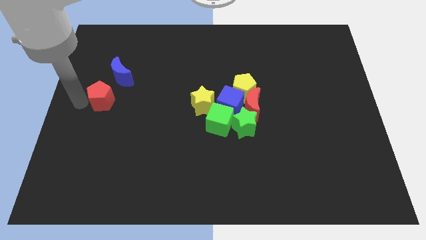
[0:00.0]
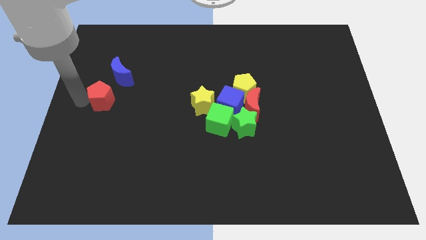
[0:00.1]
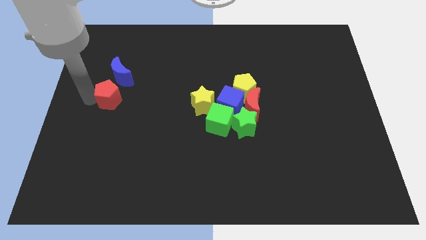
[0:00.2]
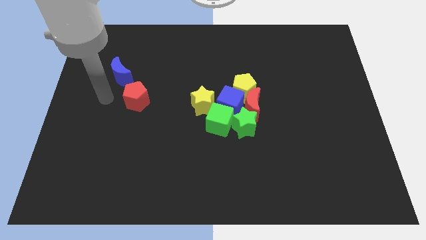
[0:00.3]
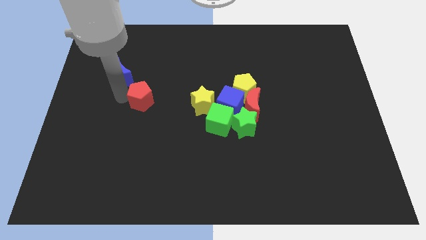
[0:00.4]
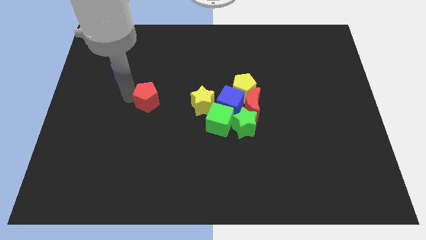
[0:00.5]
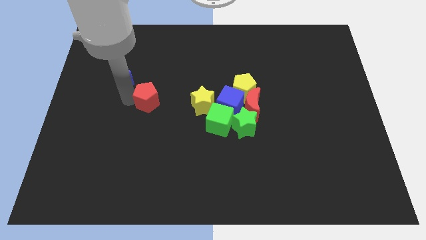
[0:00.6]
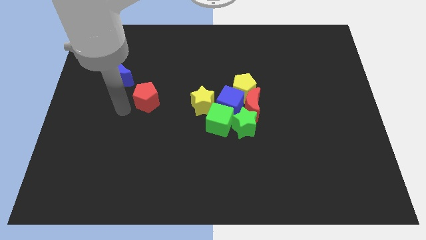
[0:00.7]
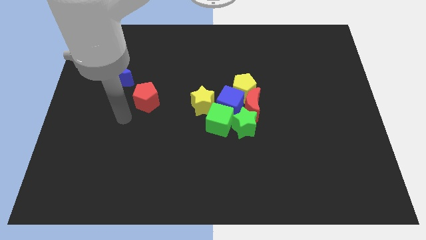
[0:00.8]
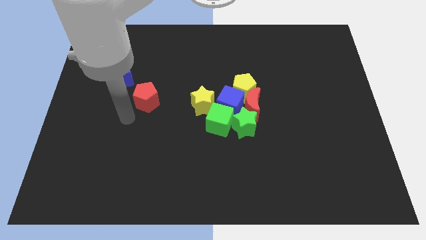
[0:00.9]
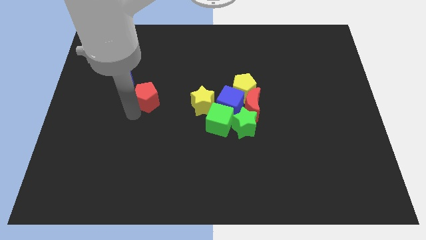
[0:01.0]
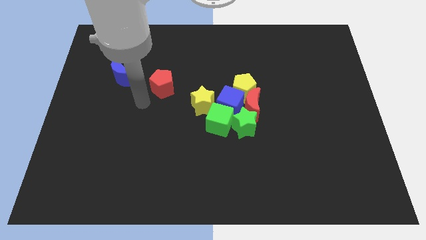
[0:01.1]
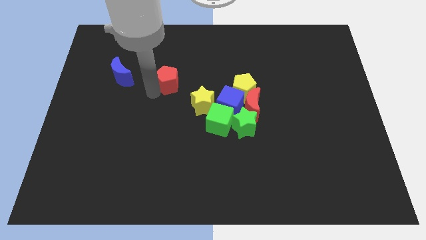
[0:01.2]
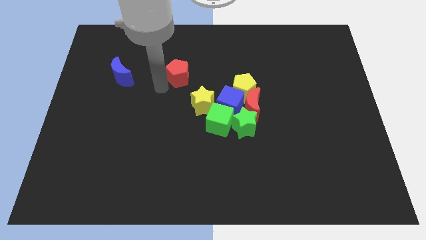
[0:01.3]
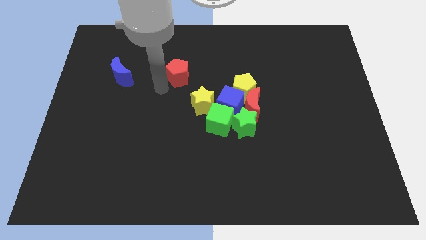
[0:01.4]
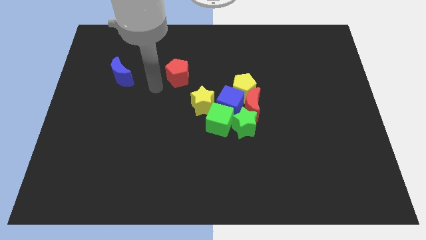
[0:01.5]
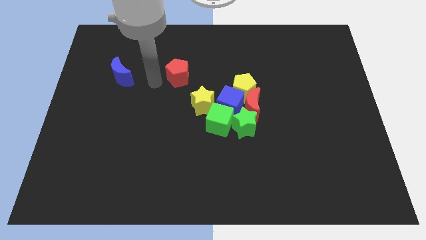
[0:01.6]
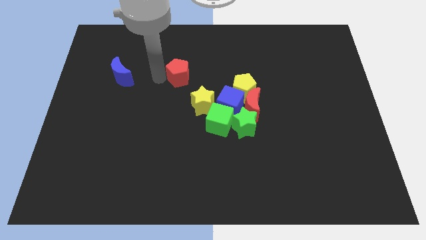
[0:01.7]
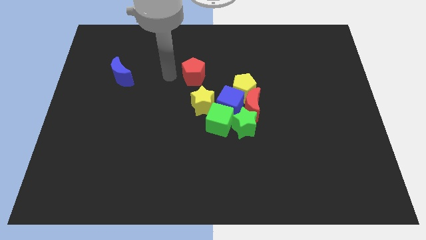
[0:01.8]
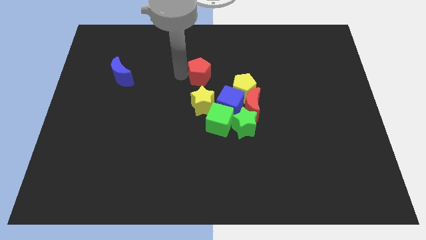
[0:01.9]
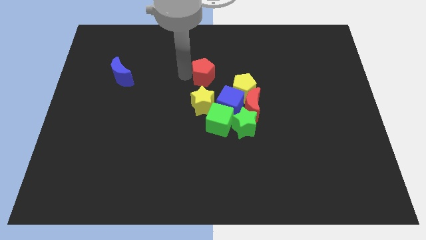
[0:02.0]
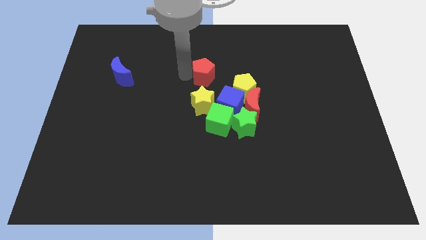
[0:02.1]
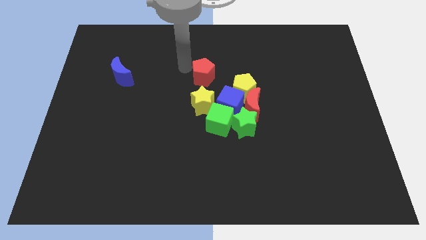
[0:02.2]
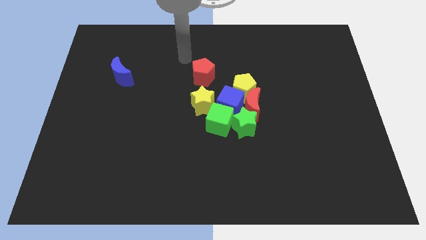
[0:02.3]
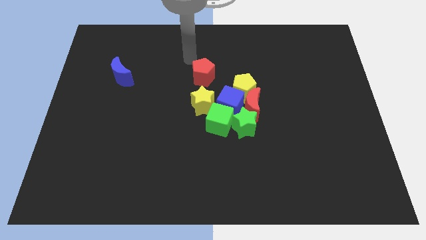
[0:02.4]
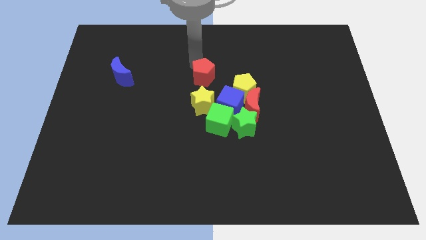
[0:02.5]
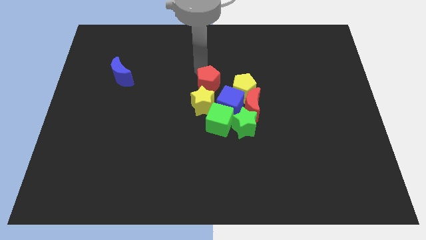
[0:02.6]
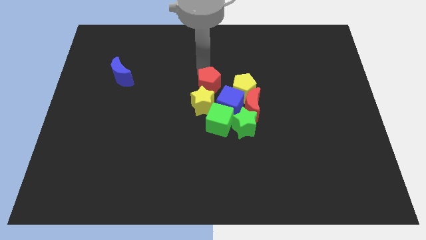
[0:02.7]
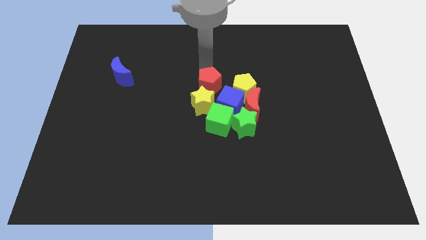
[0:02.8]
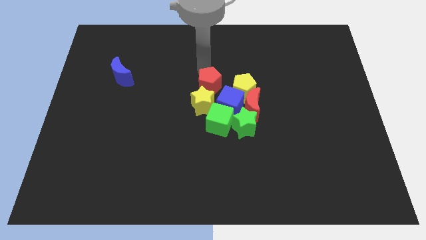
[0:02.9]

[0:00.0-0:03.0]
drag red pentagon to the right side beside the yellow star

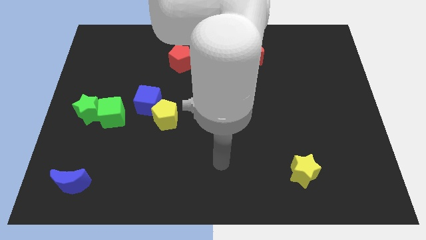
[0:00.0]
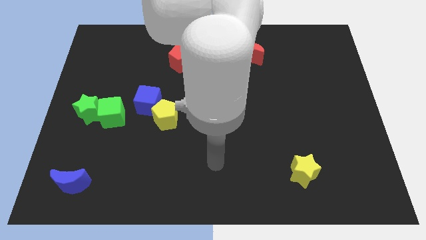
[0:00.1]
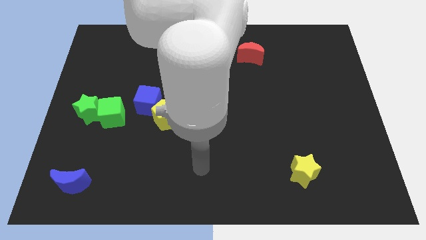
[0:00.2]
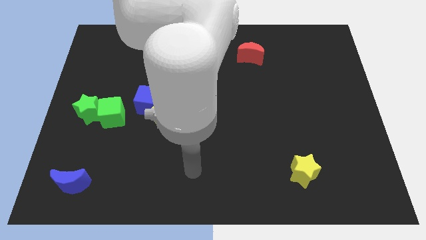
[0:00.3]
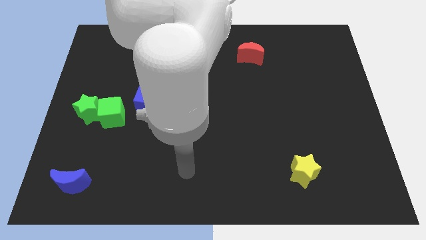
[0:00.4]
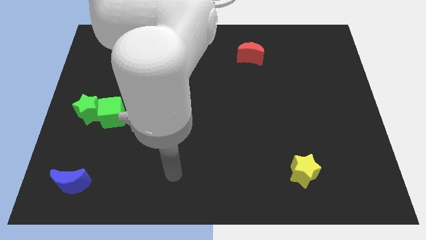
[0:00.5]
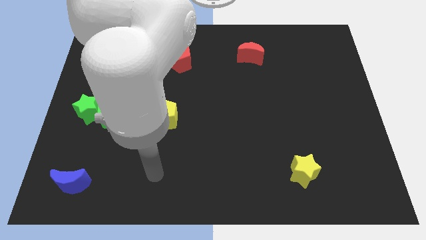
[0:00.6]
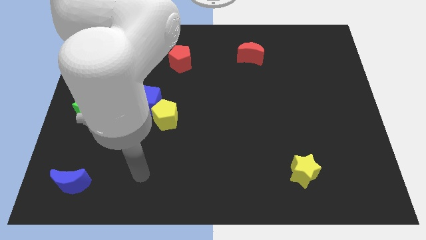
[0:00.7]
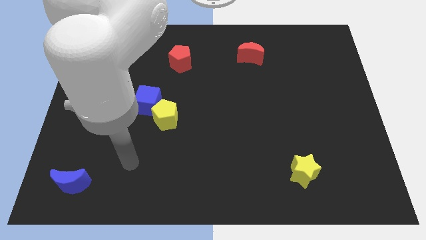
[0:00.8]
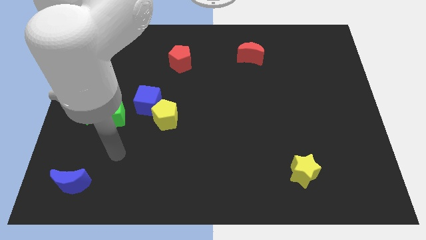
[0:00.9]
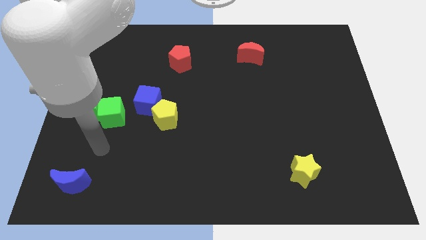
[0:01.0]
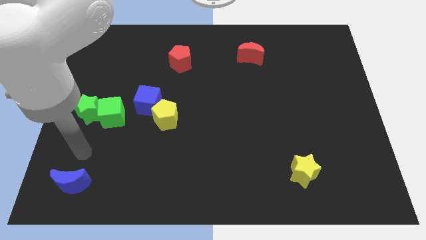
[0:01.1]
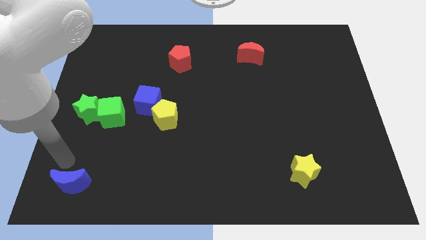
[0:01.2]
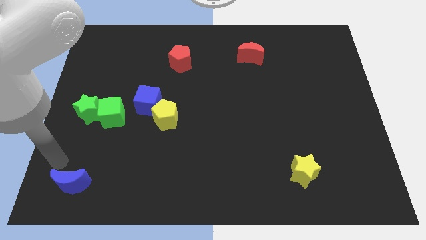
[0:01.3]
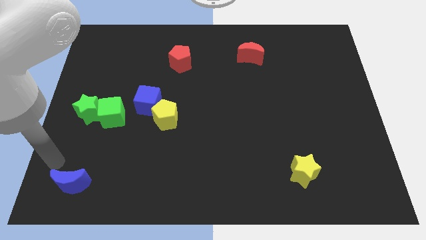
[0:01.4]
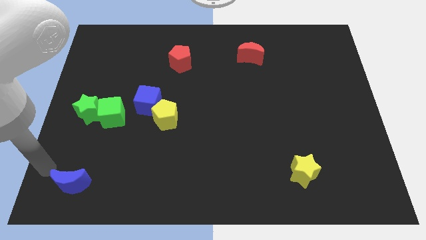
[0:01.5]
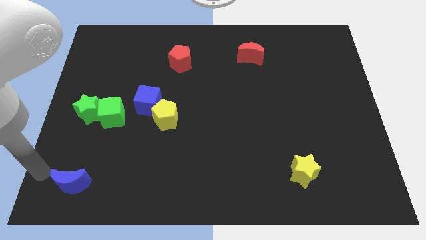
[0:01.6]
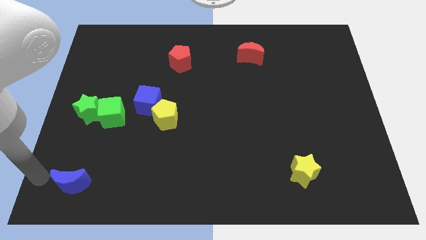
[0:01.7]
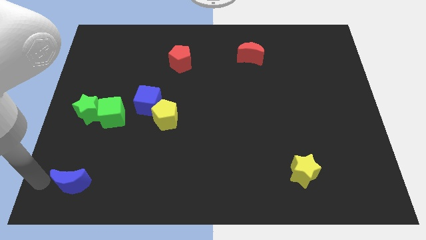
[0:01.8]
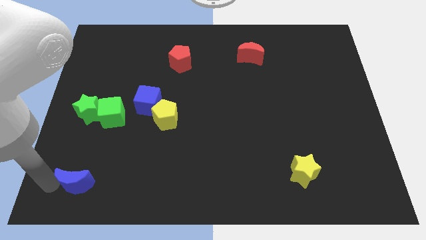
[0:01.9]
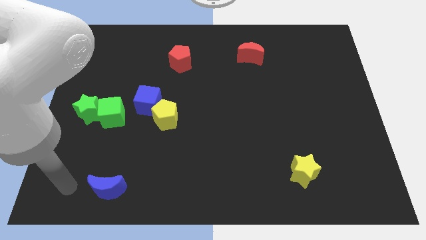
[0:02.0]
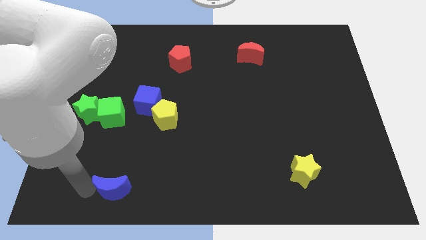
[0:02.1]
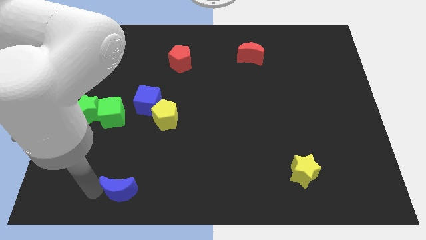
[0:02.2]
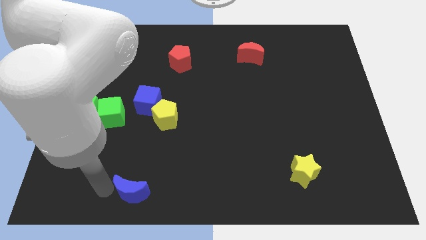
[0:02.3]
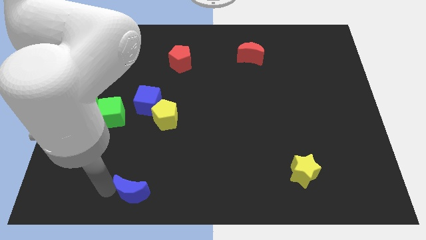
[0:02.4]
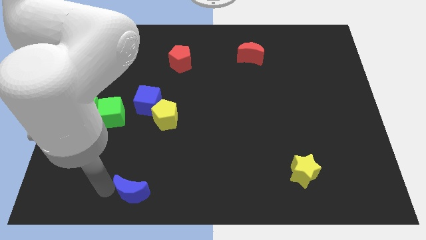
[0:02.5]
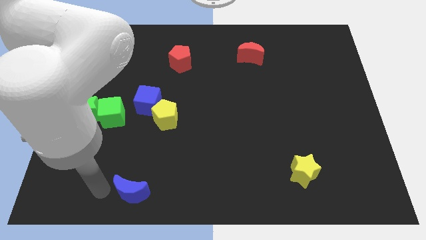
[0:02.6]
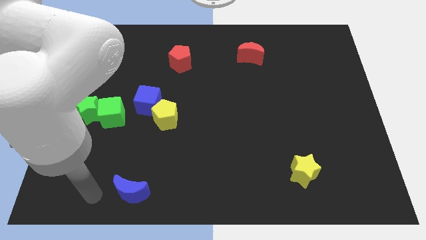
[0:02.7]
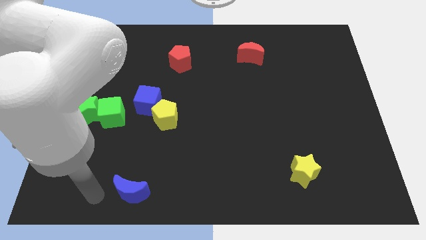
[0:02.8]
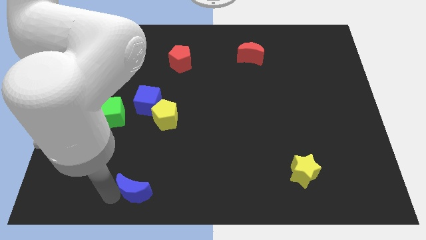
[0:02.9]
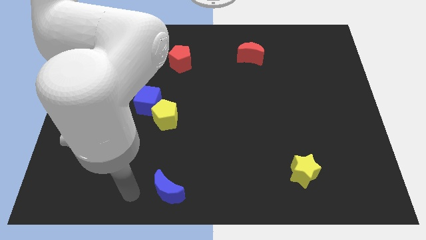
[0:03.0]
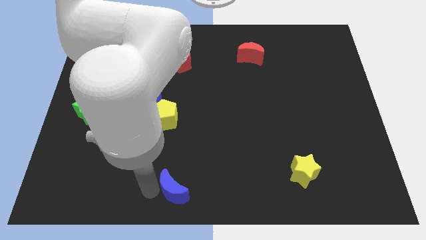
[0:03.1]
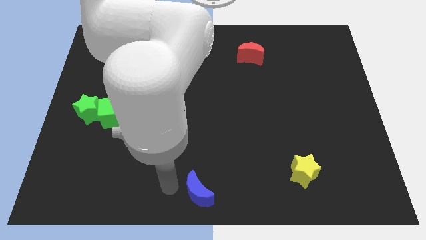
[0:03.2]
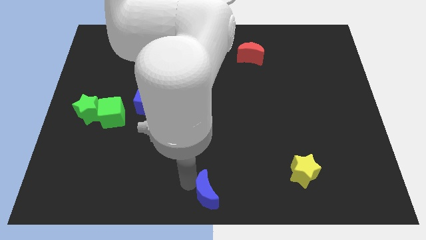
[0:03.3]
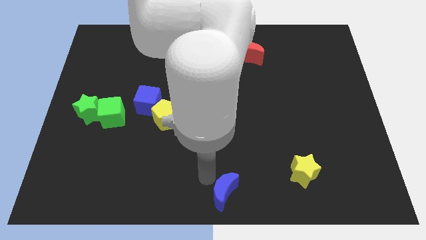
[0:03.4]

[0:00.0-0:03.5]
move the blue crescent to the bottom center of the board

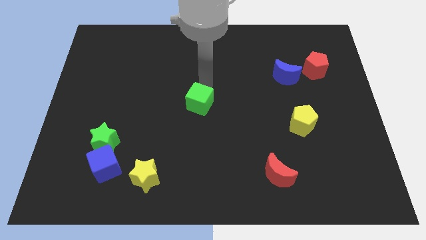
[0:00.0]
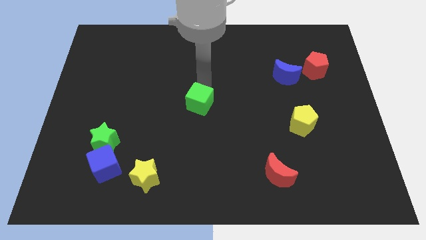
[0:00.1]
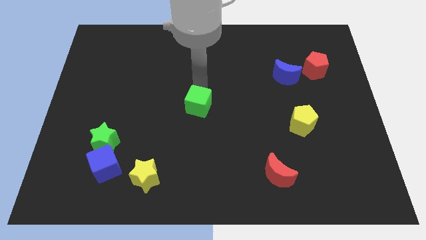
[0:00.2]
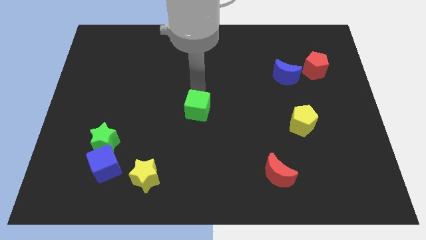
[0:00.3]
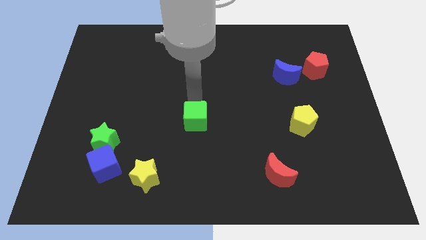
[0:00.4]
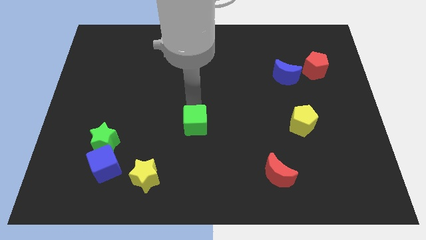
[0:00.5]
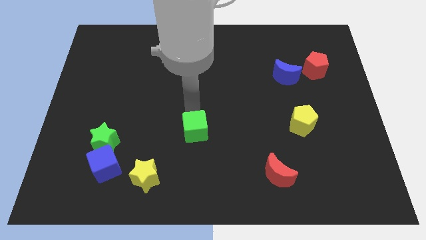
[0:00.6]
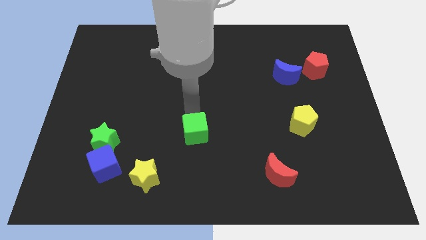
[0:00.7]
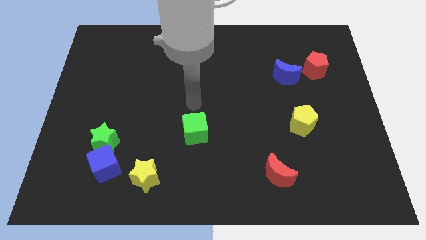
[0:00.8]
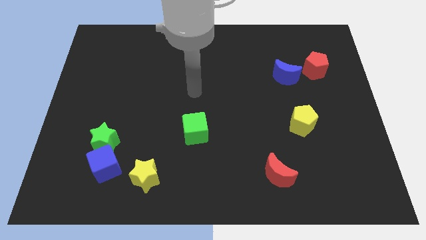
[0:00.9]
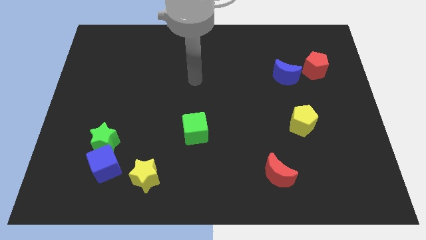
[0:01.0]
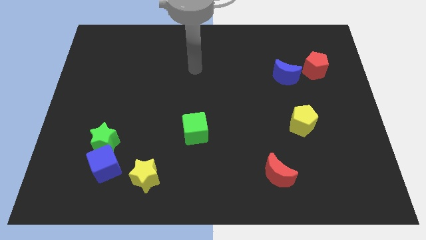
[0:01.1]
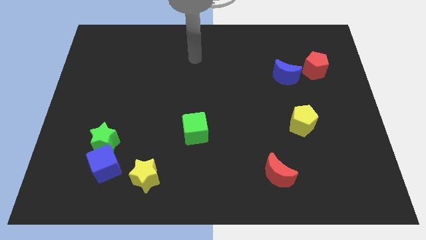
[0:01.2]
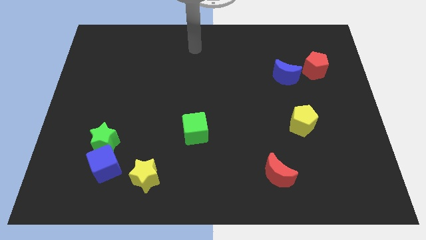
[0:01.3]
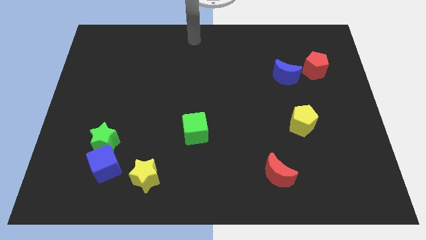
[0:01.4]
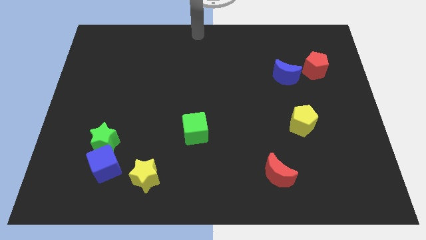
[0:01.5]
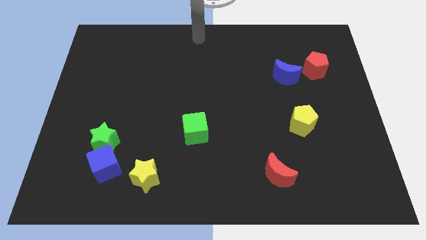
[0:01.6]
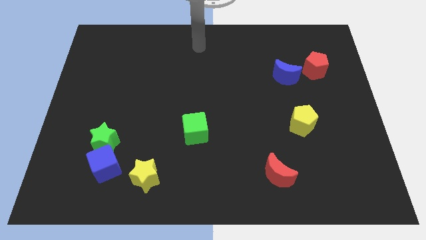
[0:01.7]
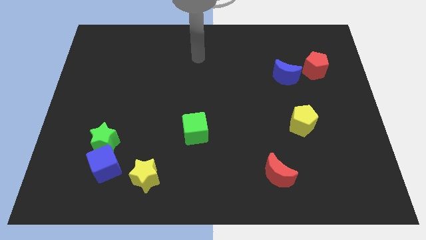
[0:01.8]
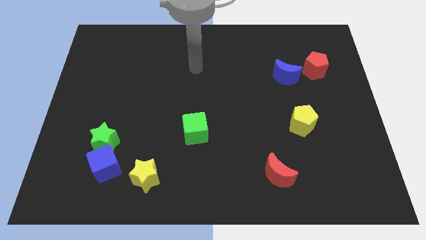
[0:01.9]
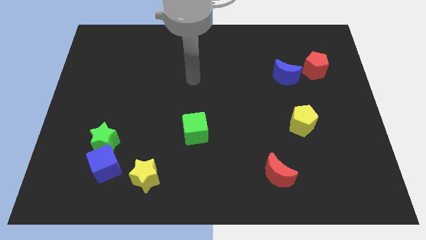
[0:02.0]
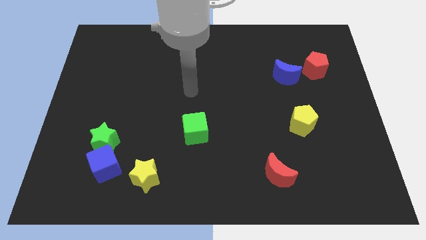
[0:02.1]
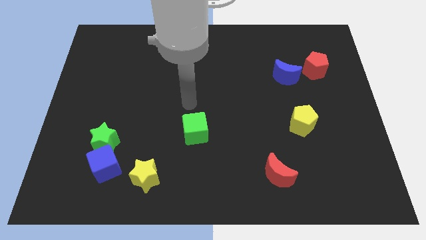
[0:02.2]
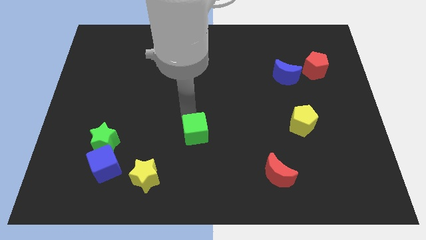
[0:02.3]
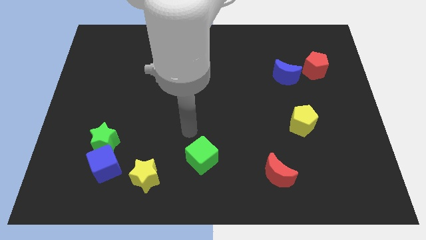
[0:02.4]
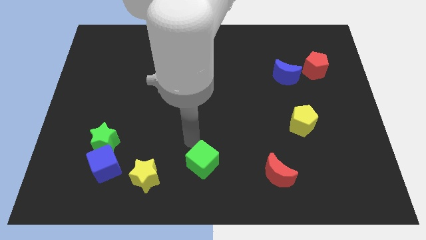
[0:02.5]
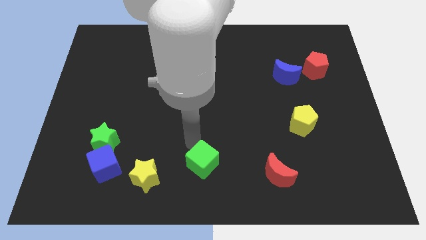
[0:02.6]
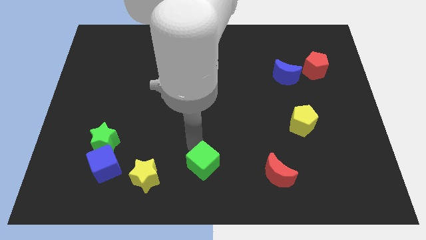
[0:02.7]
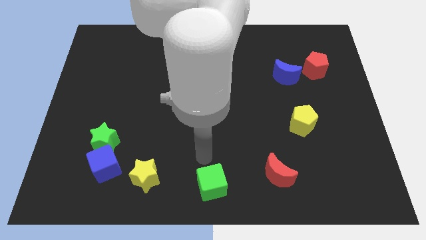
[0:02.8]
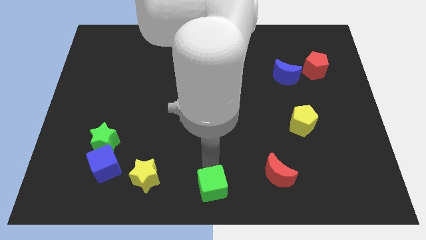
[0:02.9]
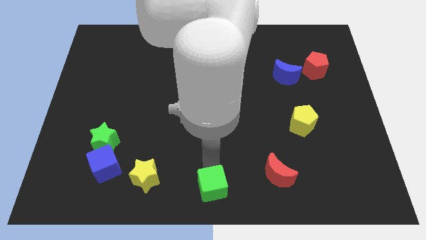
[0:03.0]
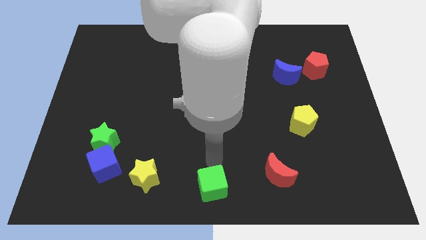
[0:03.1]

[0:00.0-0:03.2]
move the green cube towards the right side of the yellow star
